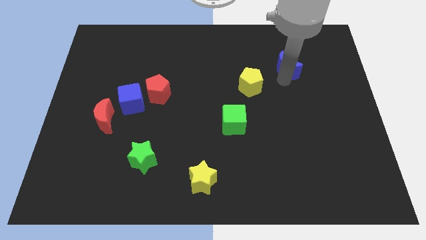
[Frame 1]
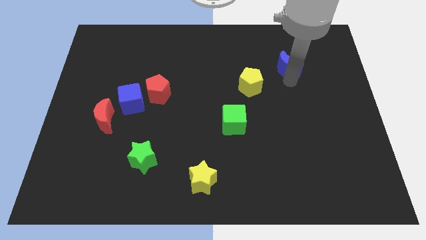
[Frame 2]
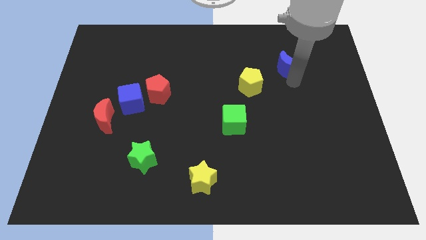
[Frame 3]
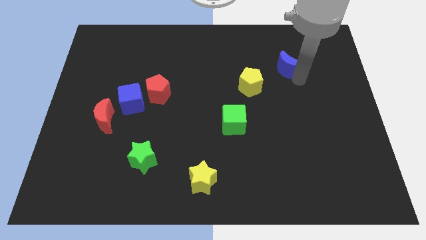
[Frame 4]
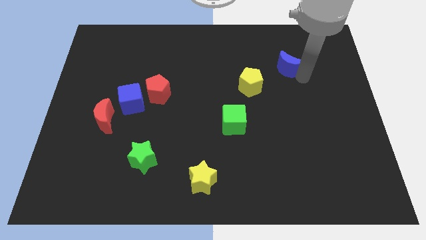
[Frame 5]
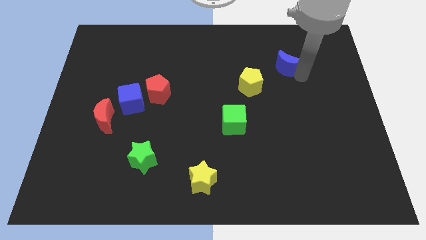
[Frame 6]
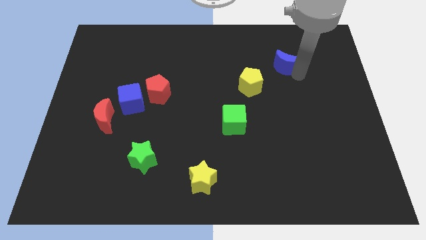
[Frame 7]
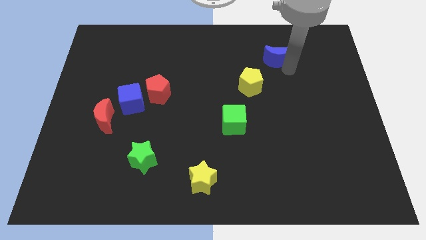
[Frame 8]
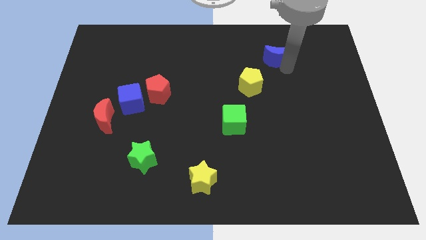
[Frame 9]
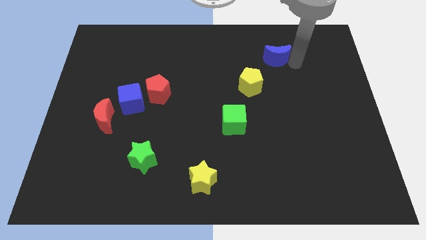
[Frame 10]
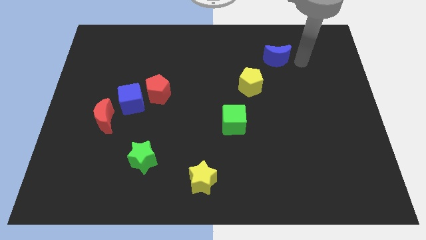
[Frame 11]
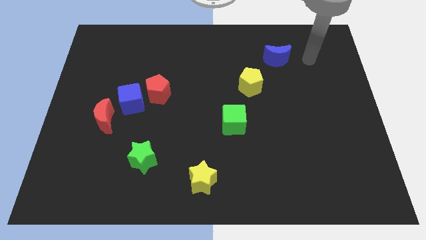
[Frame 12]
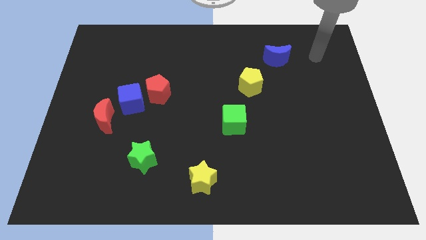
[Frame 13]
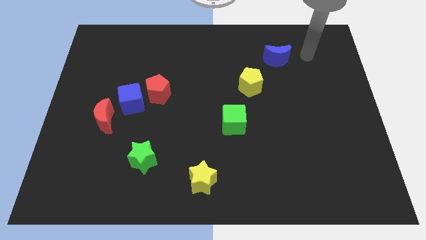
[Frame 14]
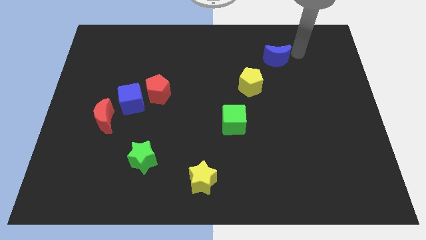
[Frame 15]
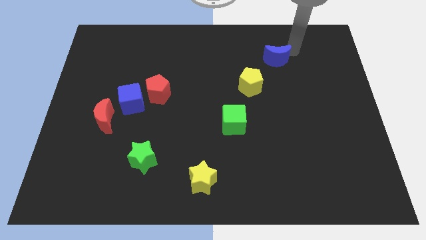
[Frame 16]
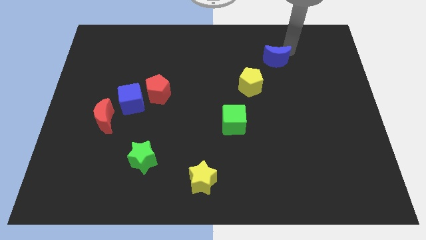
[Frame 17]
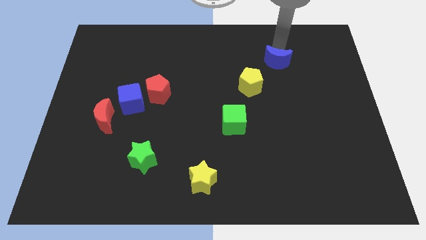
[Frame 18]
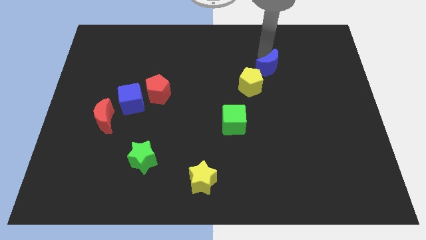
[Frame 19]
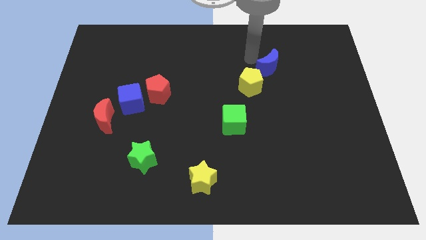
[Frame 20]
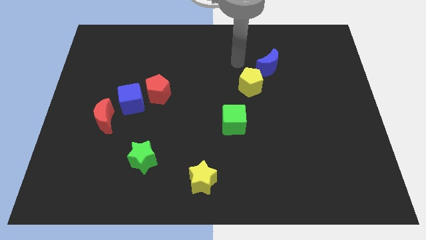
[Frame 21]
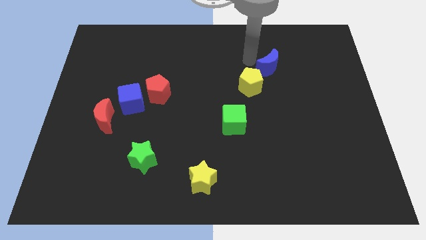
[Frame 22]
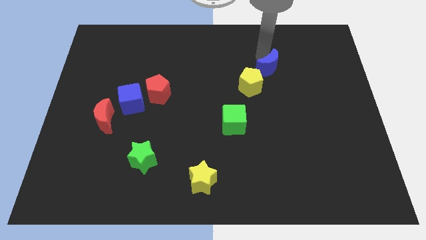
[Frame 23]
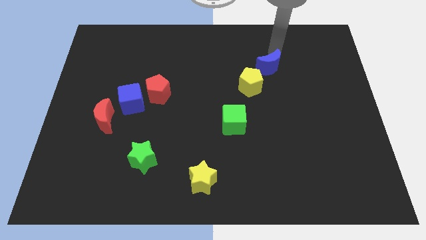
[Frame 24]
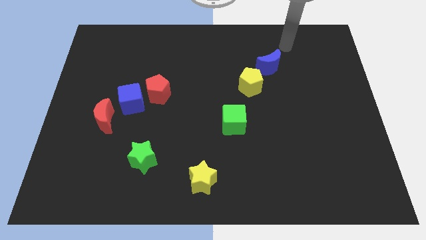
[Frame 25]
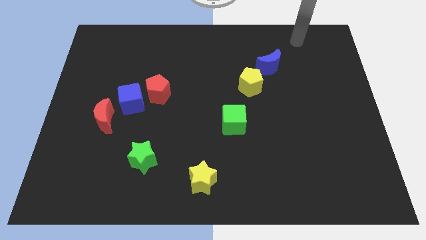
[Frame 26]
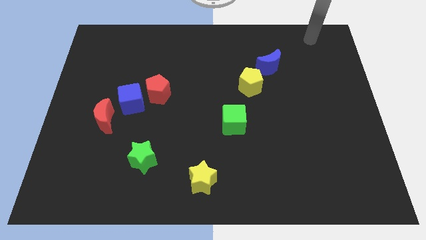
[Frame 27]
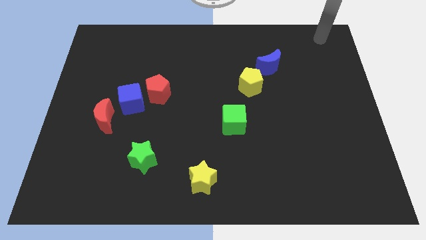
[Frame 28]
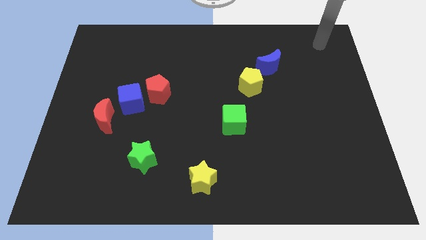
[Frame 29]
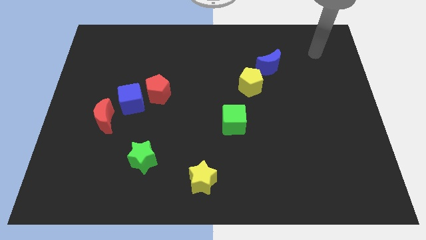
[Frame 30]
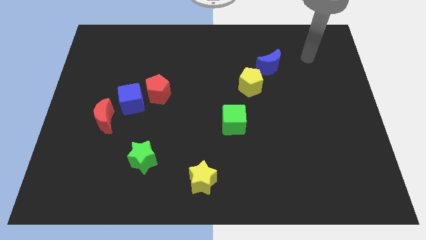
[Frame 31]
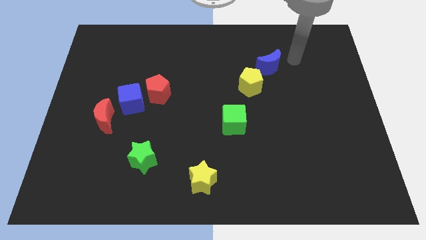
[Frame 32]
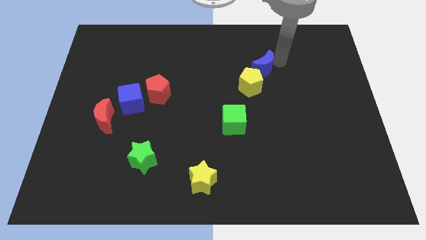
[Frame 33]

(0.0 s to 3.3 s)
push the blue moon diagonally top right to yellow pentagon

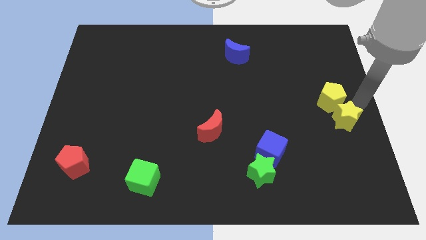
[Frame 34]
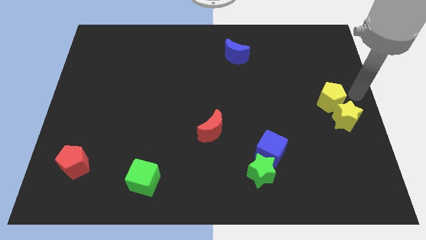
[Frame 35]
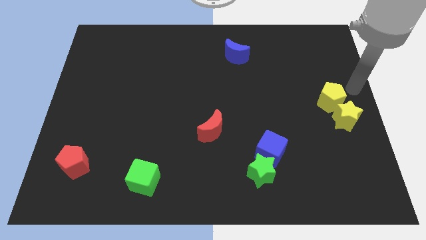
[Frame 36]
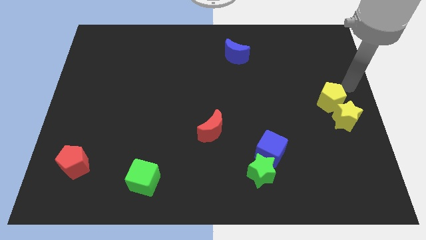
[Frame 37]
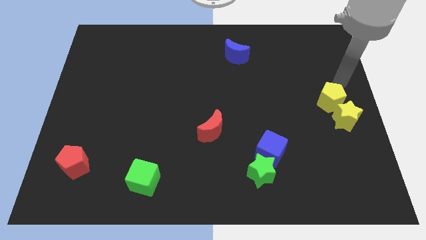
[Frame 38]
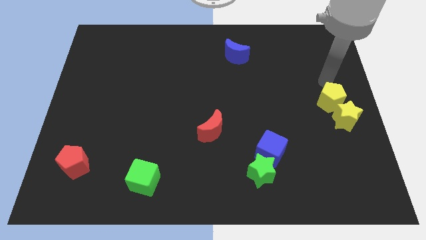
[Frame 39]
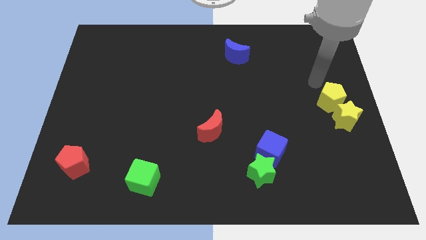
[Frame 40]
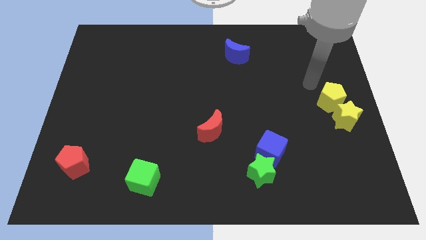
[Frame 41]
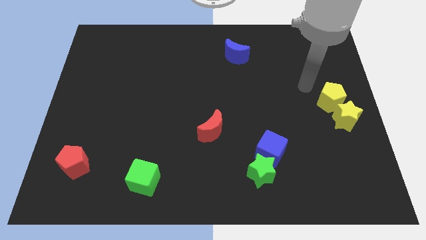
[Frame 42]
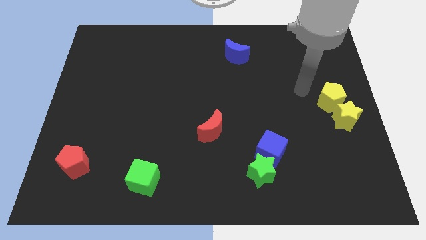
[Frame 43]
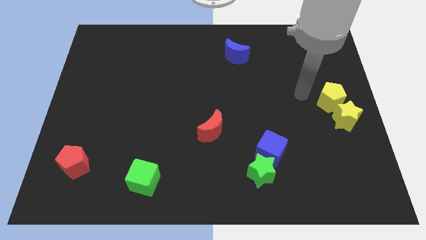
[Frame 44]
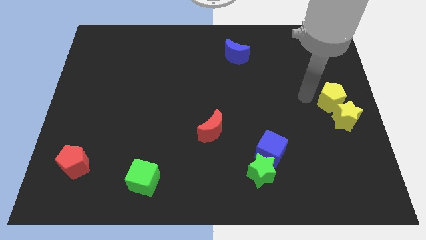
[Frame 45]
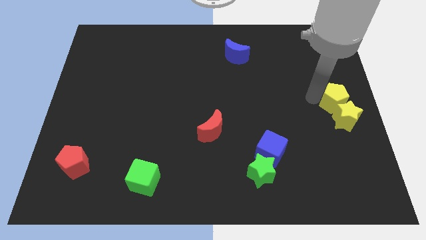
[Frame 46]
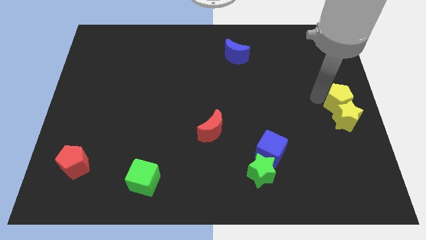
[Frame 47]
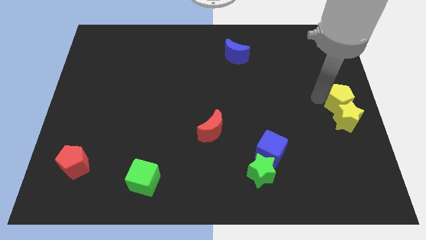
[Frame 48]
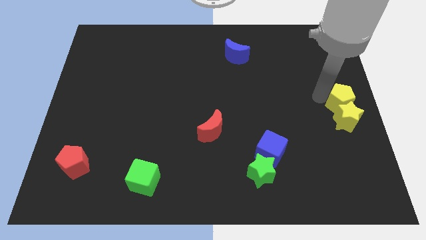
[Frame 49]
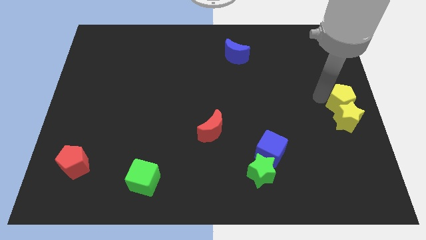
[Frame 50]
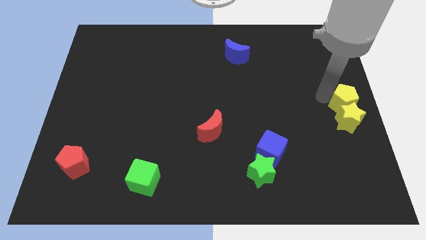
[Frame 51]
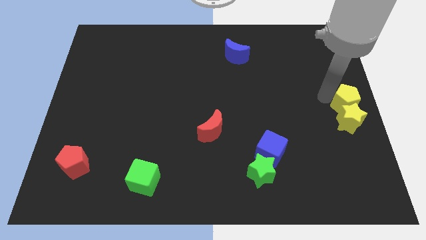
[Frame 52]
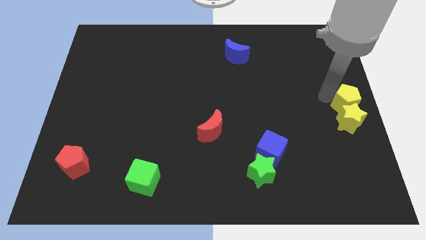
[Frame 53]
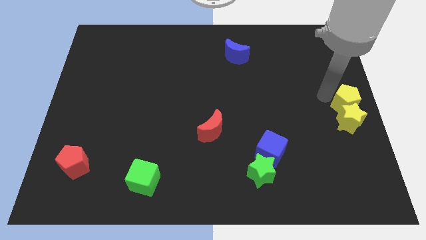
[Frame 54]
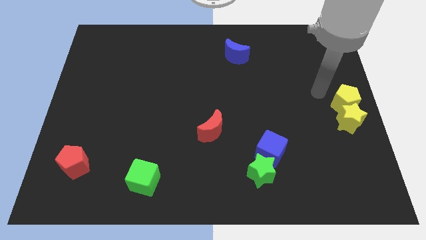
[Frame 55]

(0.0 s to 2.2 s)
place both yellow star and pentagon at right center of the board

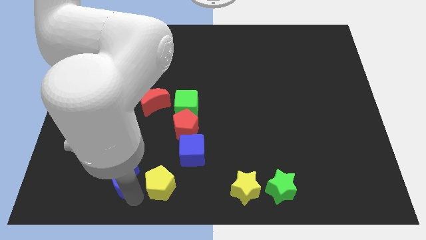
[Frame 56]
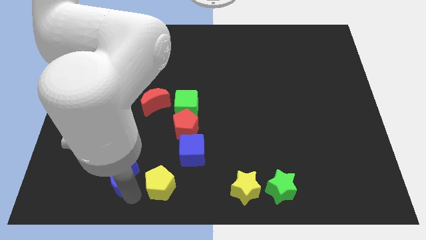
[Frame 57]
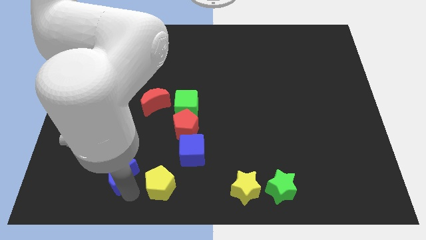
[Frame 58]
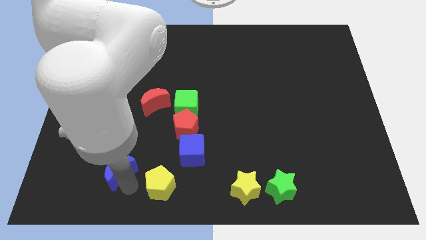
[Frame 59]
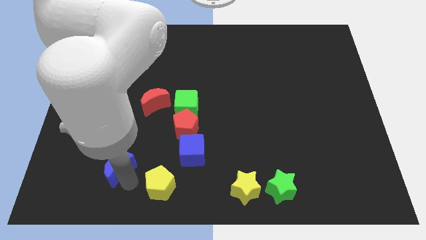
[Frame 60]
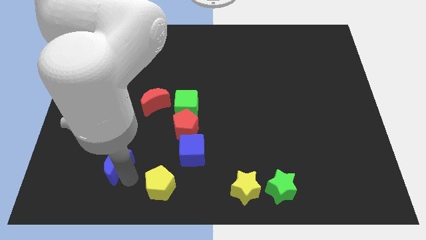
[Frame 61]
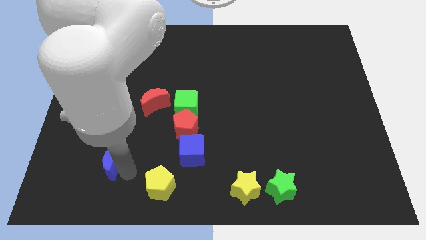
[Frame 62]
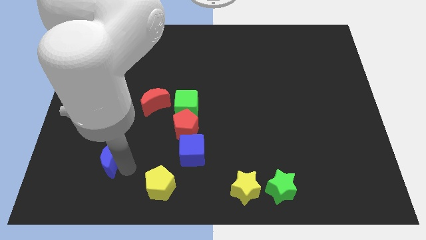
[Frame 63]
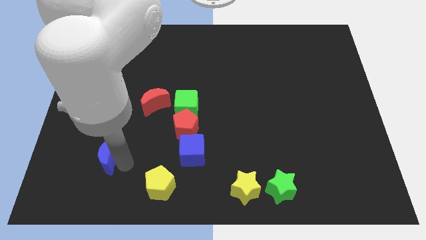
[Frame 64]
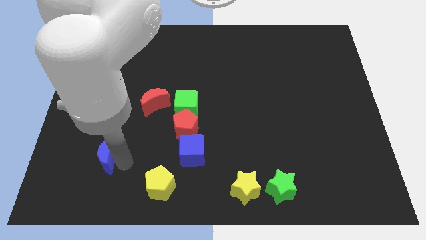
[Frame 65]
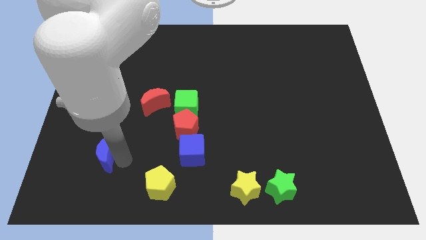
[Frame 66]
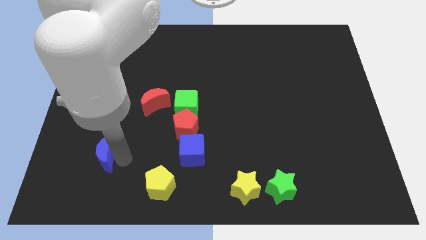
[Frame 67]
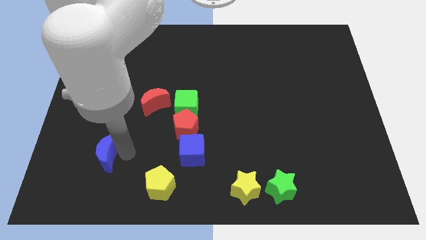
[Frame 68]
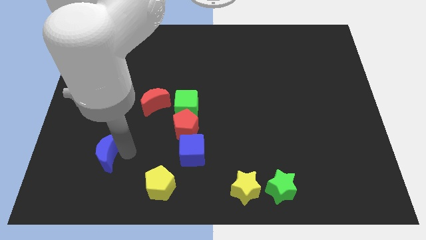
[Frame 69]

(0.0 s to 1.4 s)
drag blue moon slightly upwards

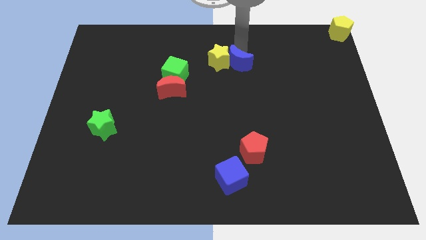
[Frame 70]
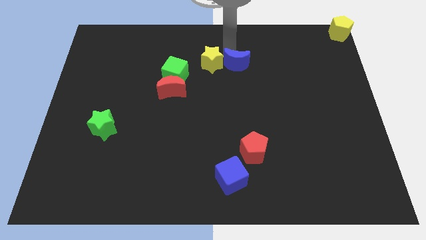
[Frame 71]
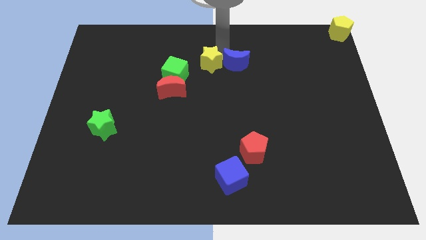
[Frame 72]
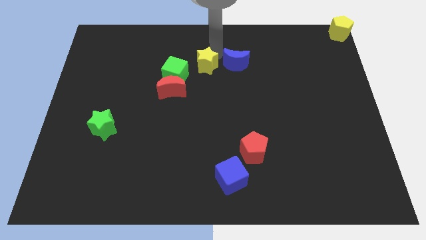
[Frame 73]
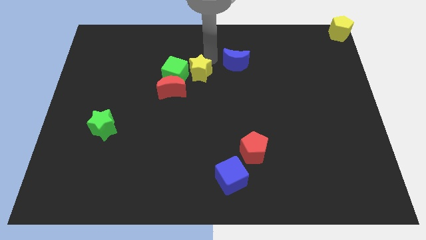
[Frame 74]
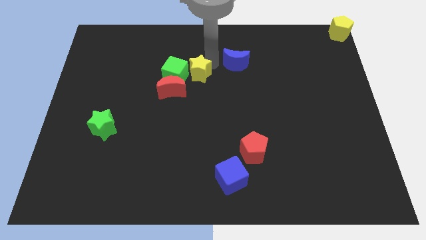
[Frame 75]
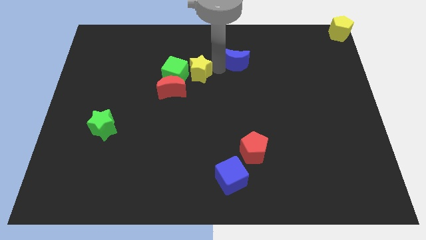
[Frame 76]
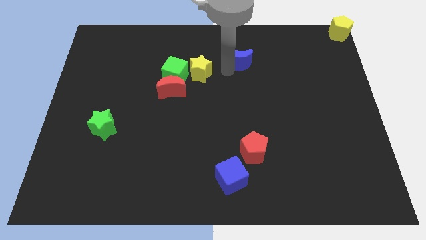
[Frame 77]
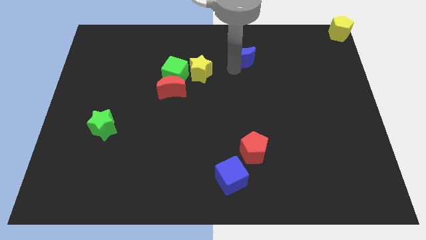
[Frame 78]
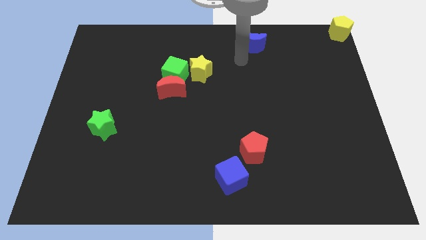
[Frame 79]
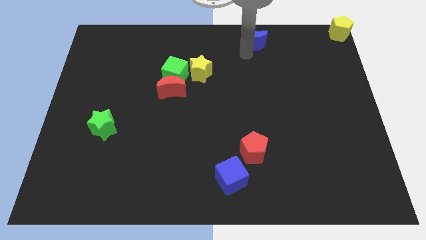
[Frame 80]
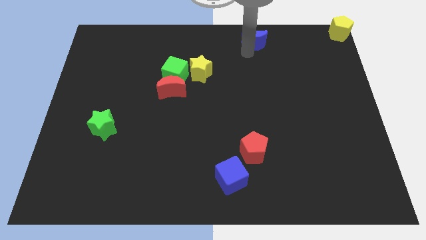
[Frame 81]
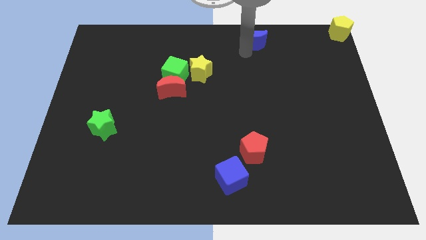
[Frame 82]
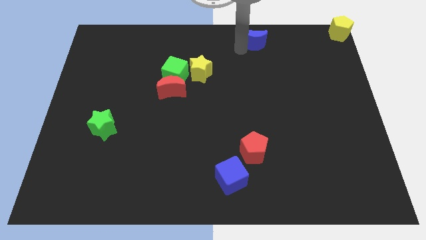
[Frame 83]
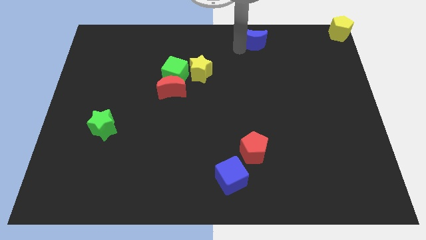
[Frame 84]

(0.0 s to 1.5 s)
move blue crescent towards up

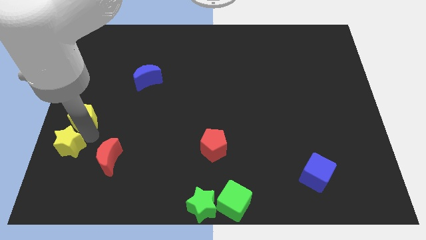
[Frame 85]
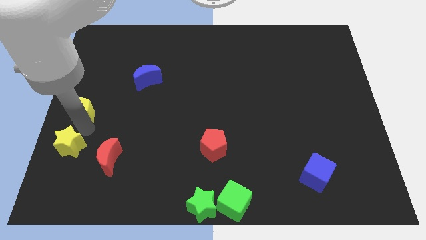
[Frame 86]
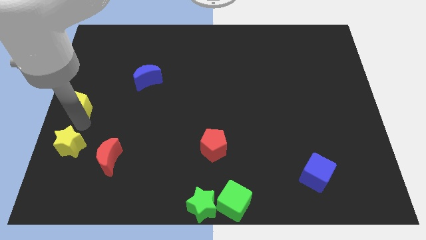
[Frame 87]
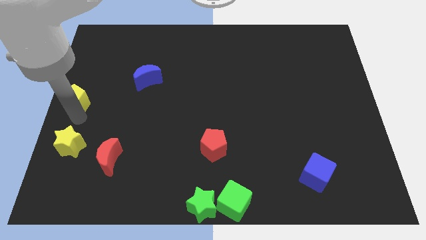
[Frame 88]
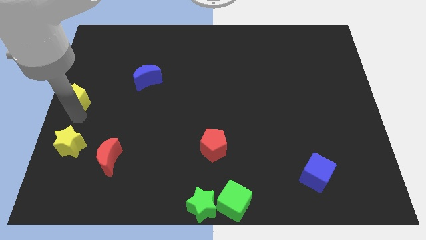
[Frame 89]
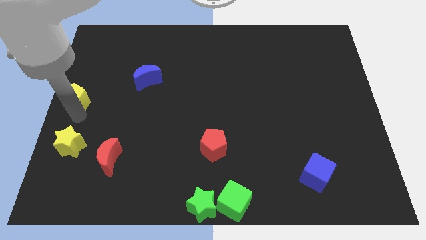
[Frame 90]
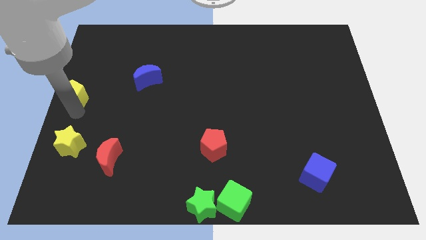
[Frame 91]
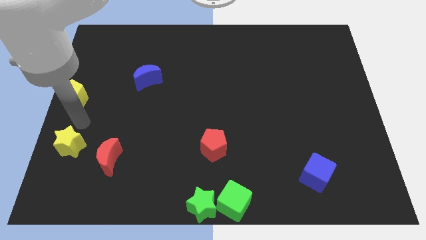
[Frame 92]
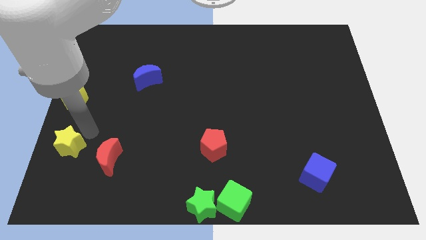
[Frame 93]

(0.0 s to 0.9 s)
push the yellow pentagon to the center left of the board
